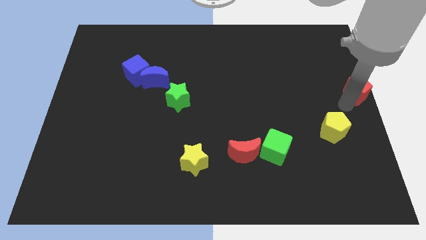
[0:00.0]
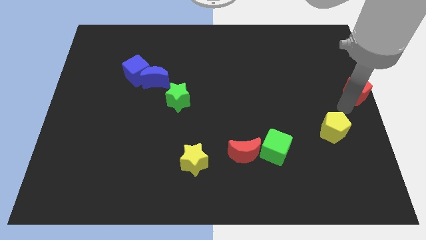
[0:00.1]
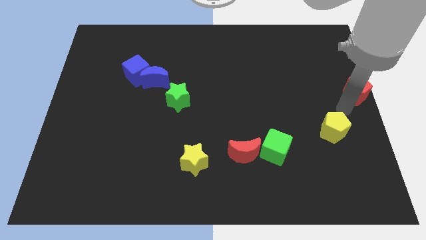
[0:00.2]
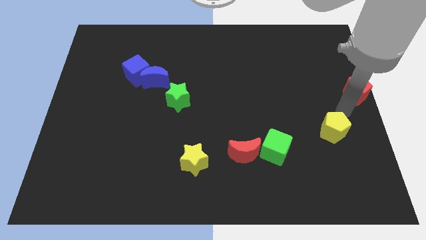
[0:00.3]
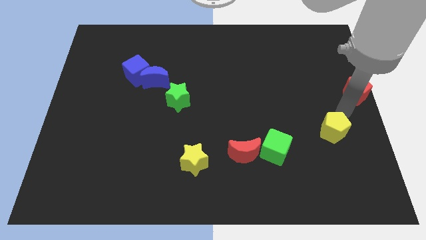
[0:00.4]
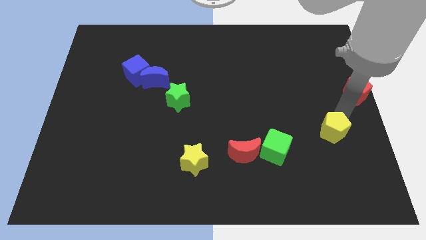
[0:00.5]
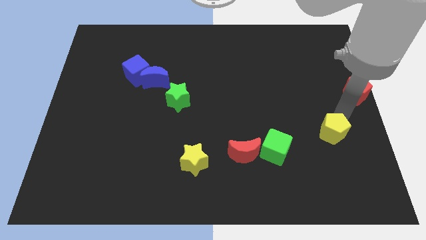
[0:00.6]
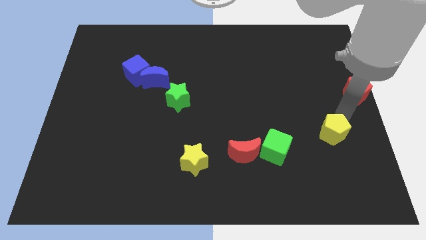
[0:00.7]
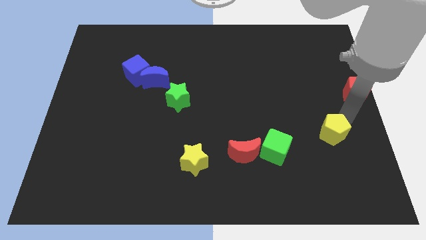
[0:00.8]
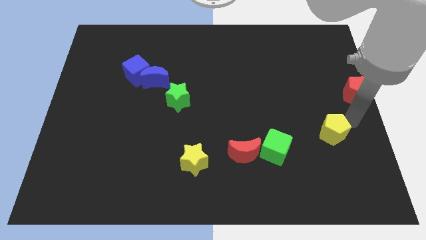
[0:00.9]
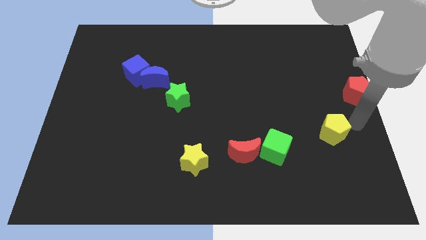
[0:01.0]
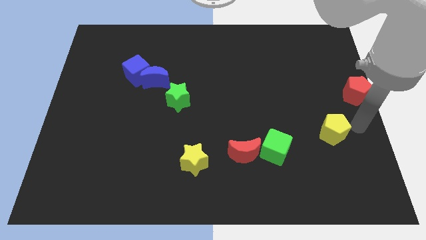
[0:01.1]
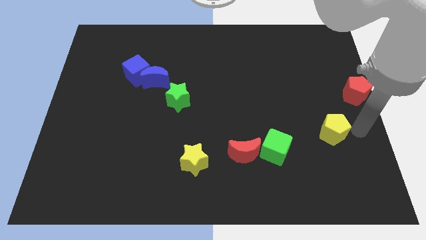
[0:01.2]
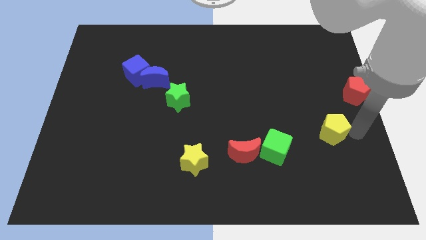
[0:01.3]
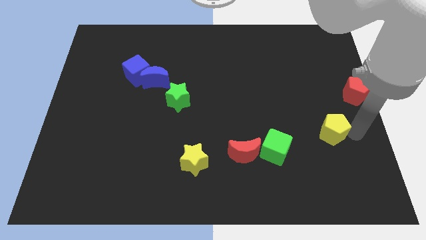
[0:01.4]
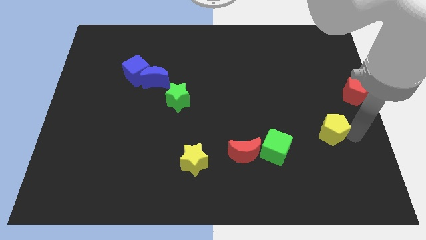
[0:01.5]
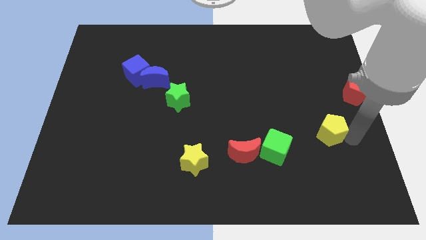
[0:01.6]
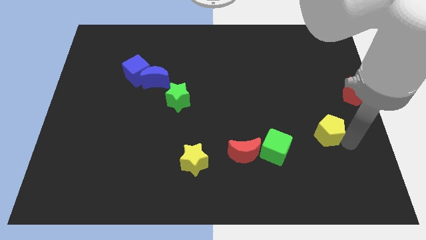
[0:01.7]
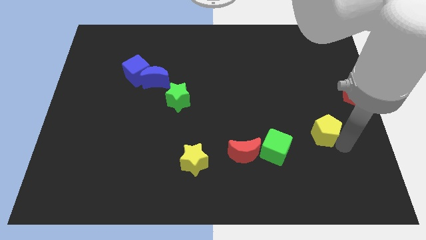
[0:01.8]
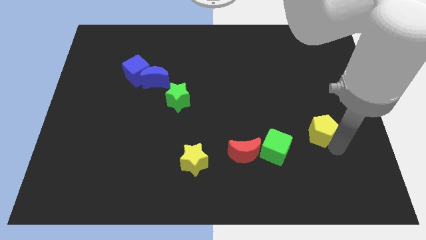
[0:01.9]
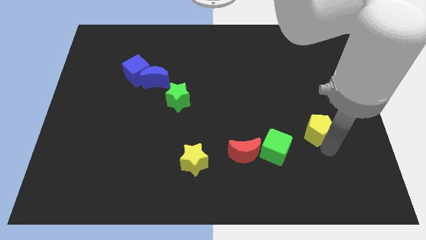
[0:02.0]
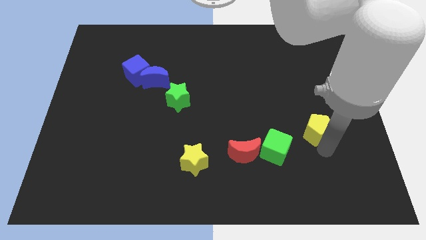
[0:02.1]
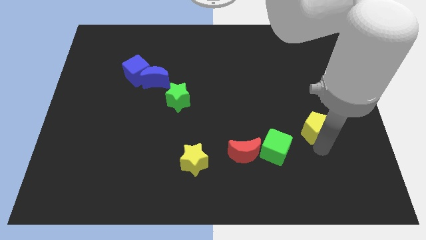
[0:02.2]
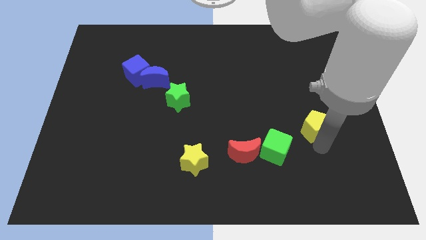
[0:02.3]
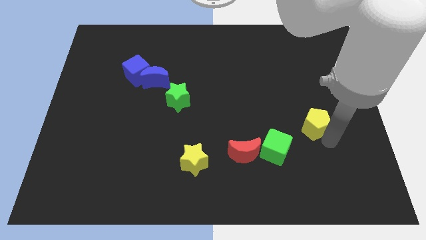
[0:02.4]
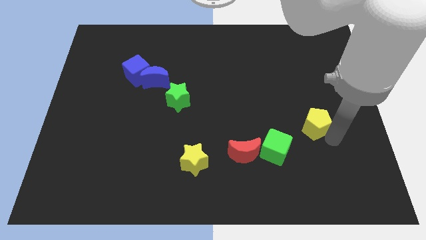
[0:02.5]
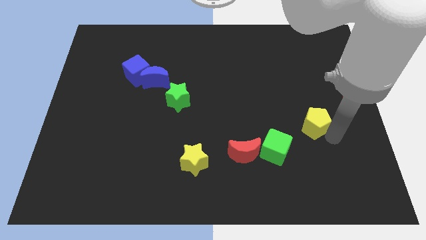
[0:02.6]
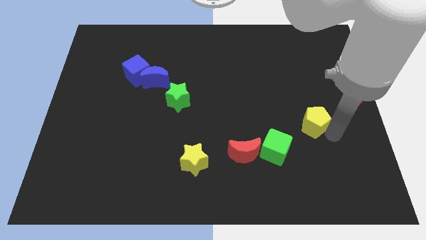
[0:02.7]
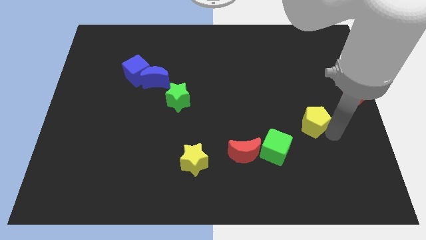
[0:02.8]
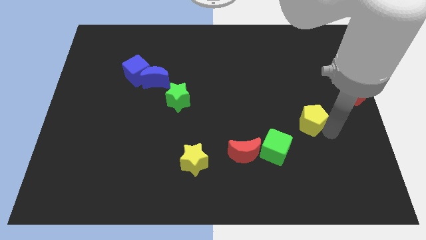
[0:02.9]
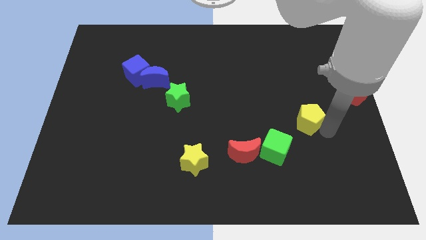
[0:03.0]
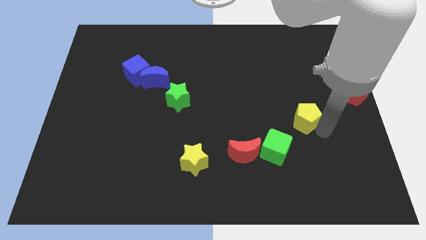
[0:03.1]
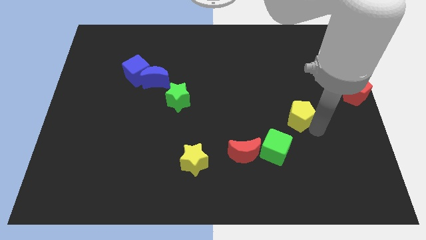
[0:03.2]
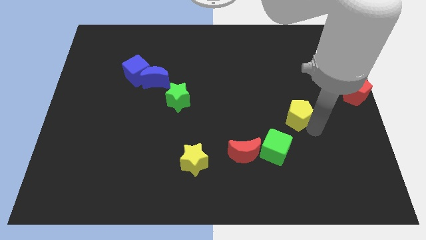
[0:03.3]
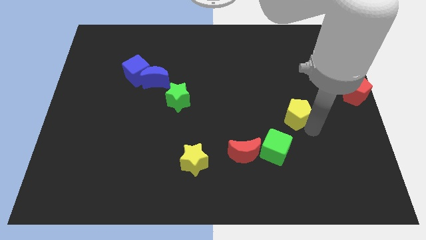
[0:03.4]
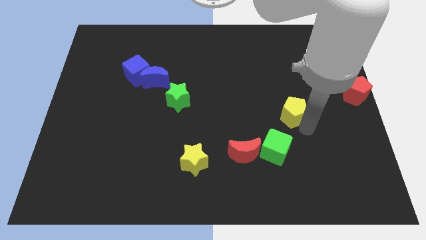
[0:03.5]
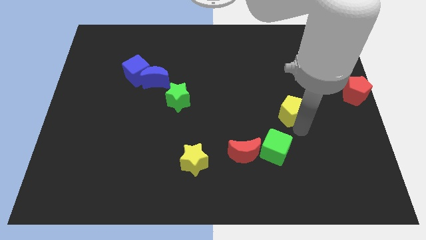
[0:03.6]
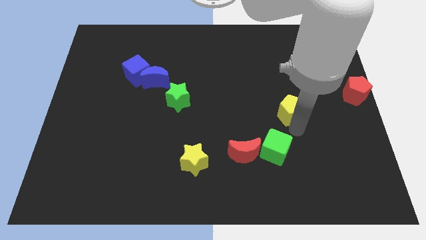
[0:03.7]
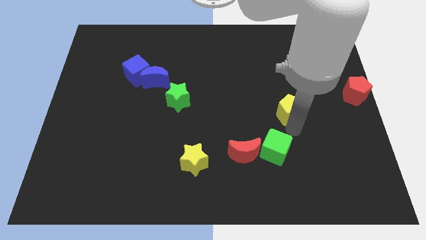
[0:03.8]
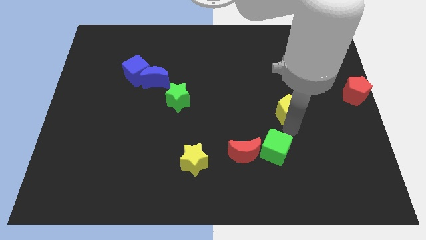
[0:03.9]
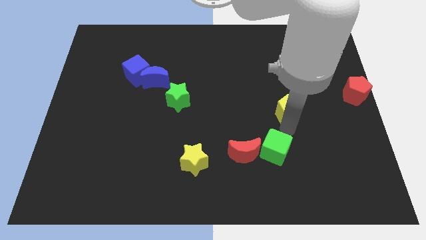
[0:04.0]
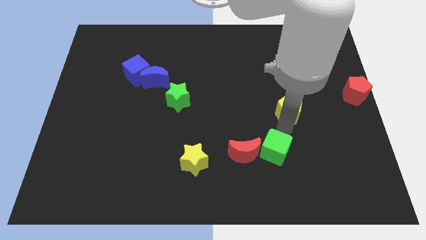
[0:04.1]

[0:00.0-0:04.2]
place the yellow pentagon above the green cube

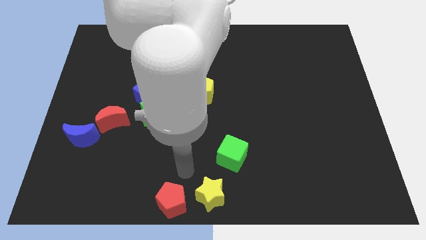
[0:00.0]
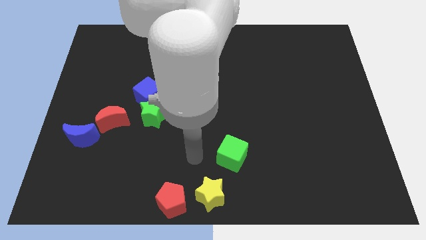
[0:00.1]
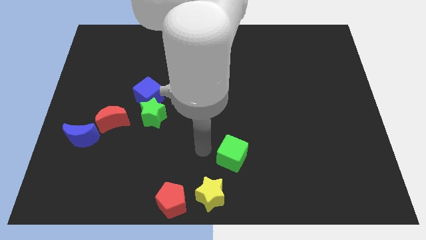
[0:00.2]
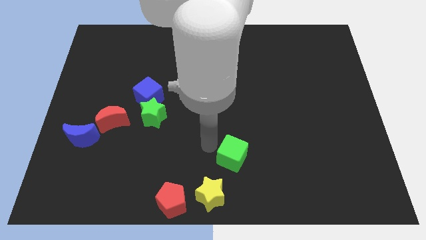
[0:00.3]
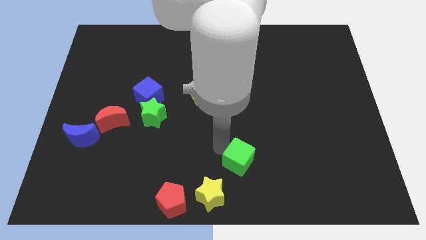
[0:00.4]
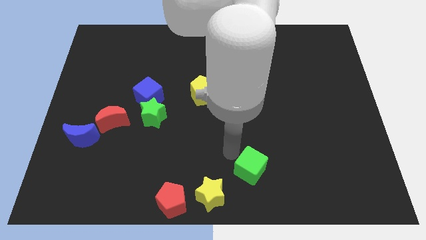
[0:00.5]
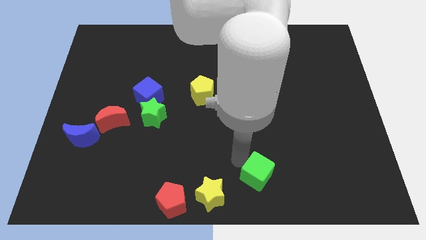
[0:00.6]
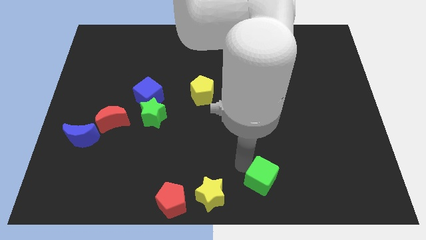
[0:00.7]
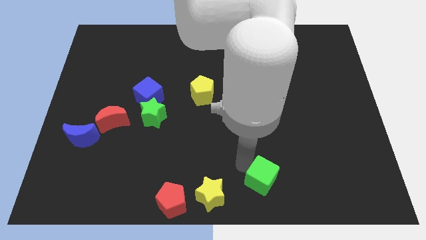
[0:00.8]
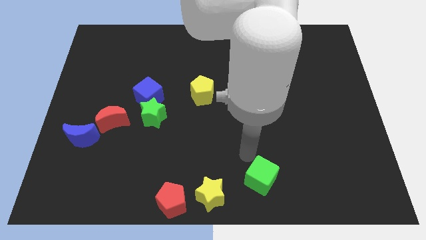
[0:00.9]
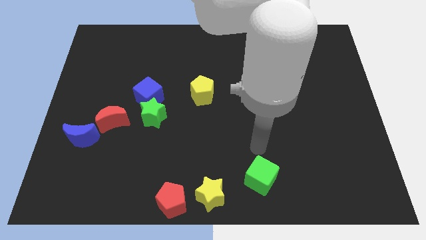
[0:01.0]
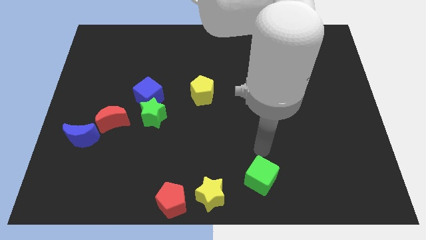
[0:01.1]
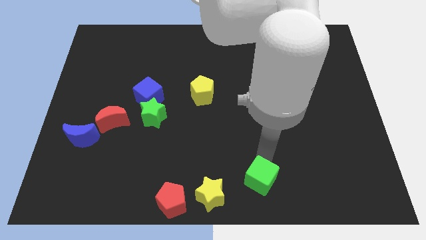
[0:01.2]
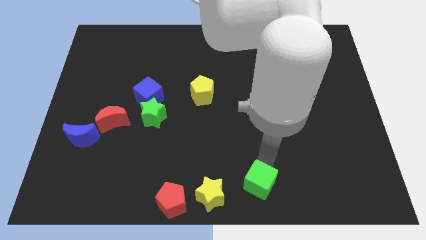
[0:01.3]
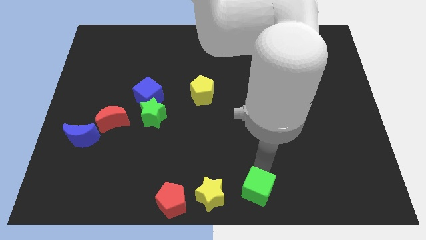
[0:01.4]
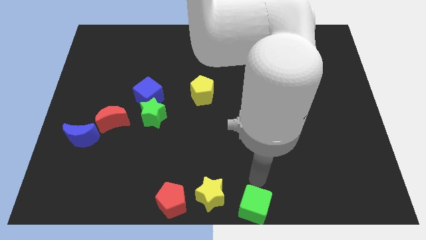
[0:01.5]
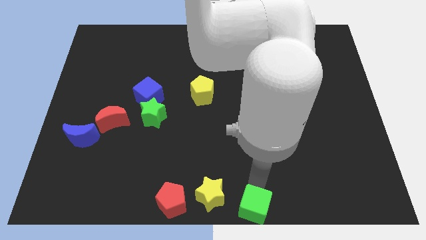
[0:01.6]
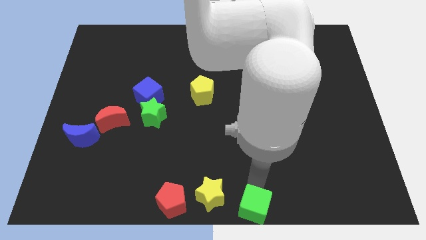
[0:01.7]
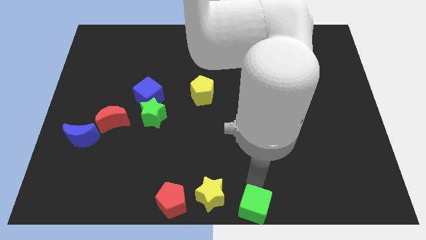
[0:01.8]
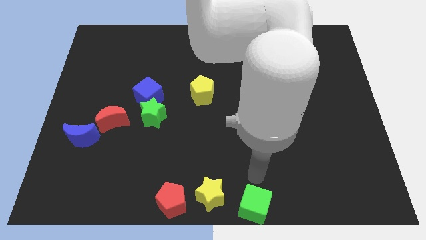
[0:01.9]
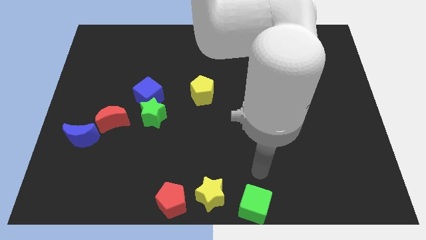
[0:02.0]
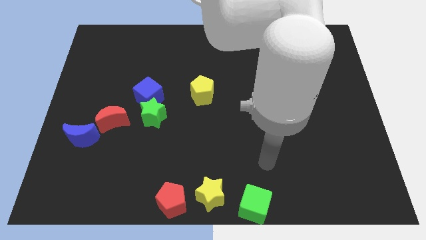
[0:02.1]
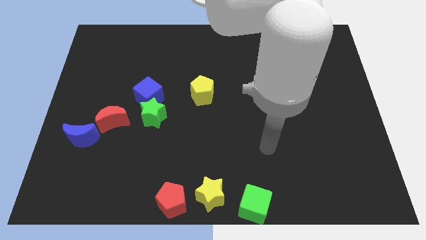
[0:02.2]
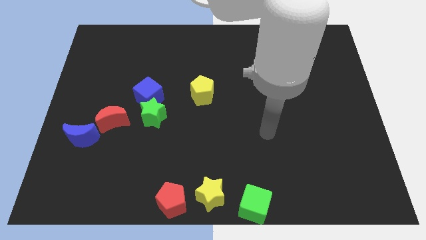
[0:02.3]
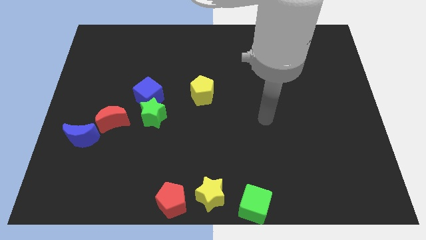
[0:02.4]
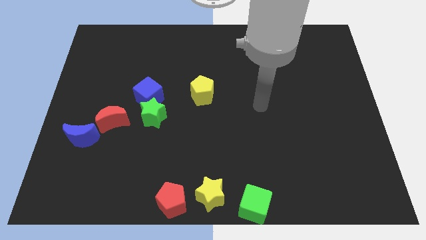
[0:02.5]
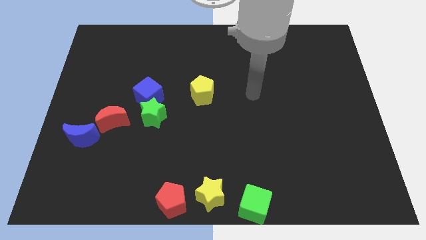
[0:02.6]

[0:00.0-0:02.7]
move the green cube towards the bottom center of the board

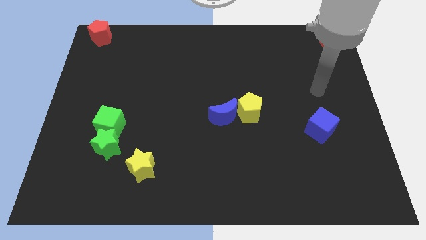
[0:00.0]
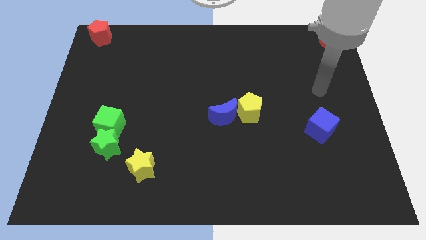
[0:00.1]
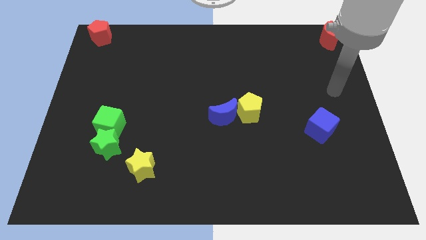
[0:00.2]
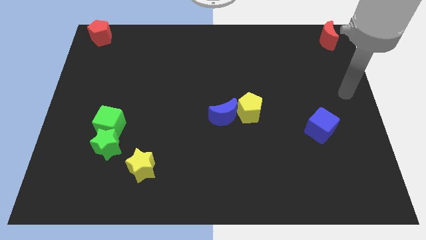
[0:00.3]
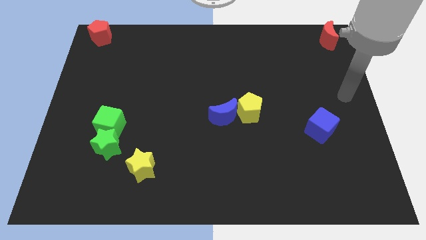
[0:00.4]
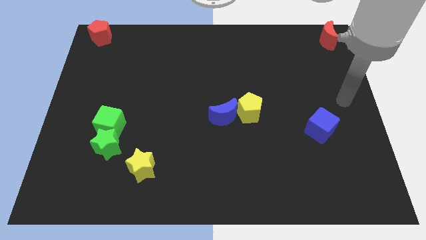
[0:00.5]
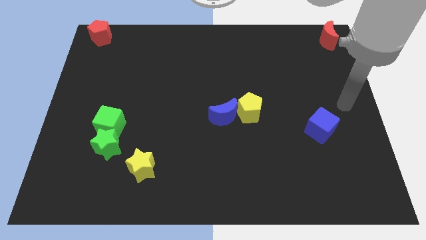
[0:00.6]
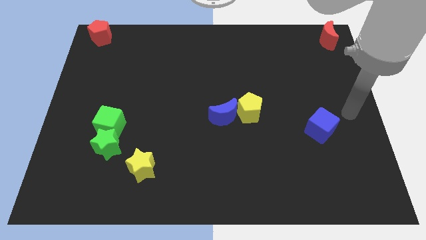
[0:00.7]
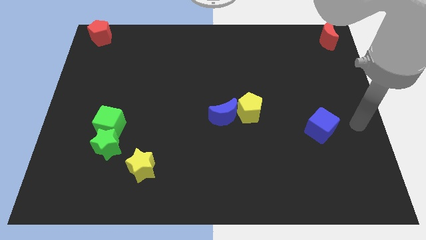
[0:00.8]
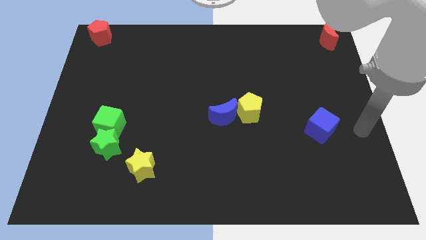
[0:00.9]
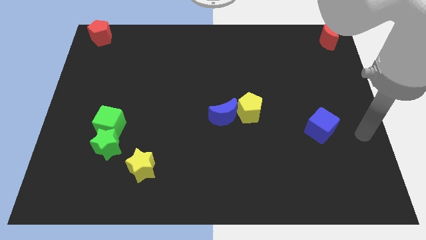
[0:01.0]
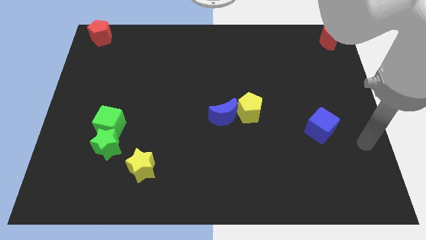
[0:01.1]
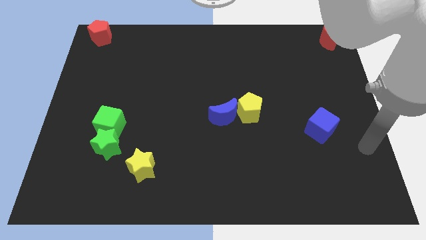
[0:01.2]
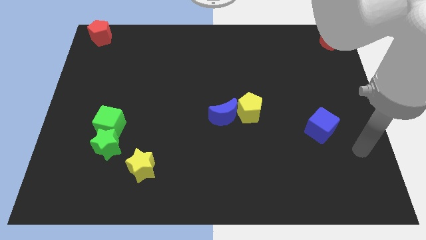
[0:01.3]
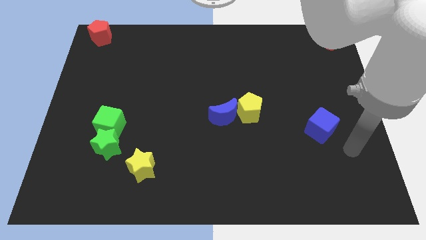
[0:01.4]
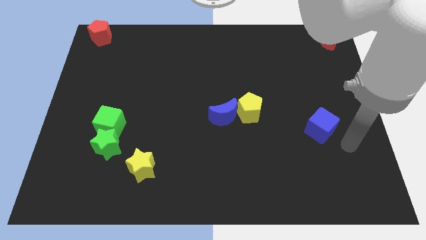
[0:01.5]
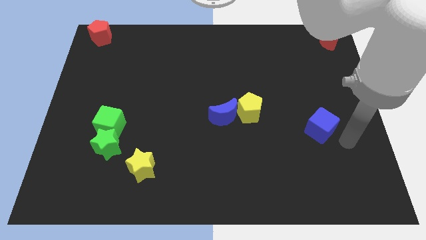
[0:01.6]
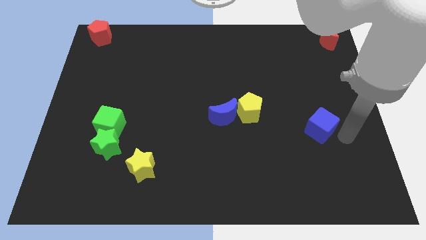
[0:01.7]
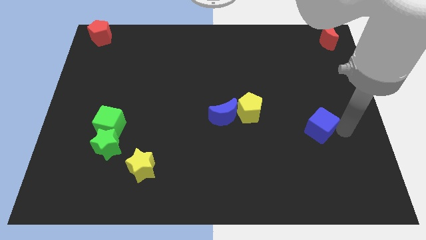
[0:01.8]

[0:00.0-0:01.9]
place your arm at the right of the blue cube

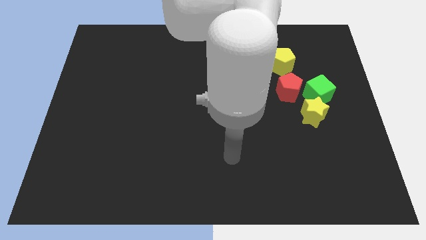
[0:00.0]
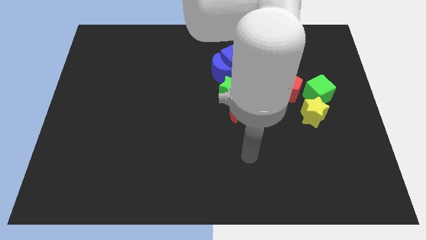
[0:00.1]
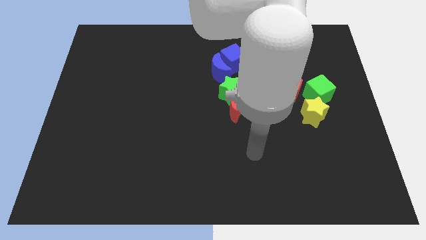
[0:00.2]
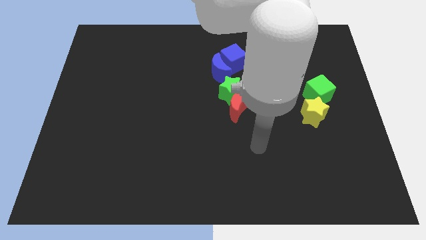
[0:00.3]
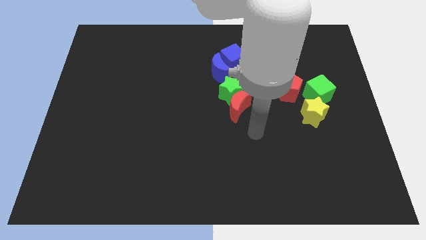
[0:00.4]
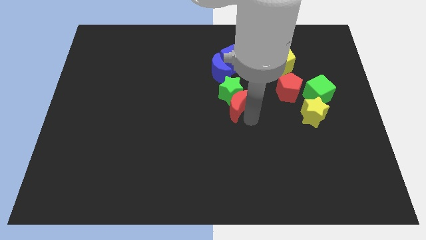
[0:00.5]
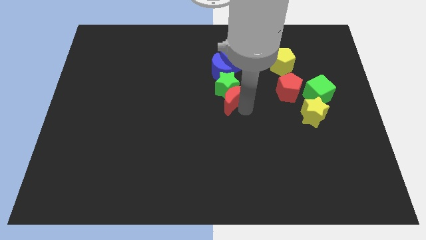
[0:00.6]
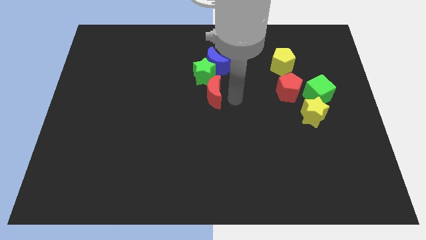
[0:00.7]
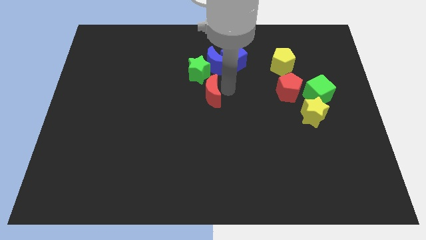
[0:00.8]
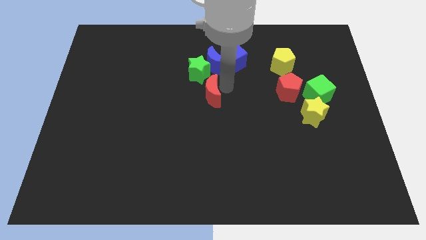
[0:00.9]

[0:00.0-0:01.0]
move the red crescent below the green star
